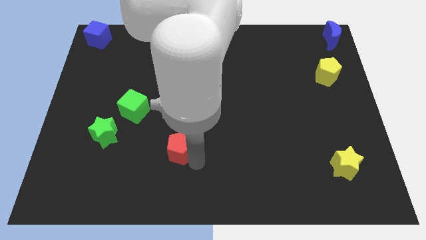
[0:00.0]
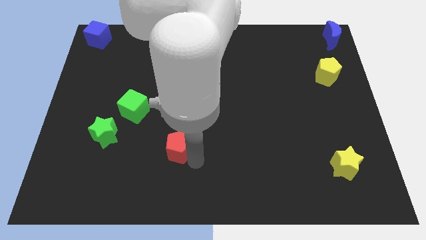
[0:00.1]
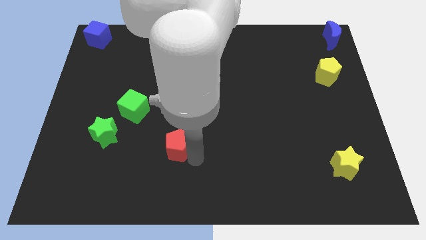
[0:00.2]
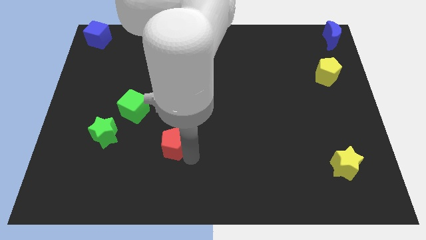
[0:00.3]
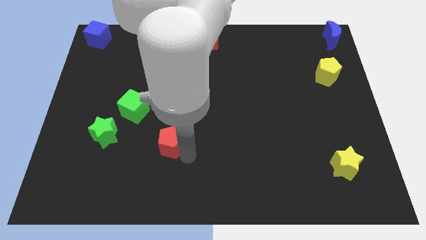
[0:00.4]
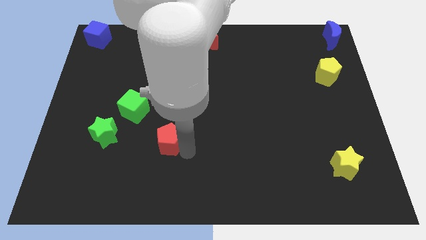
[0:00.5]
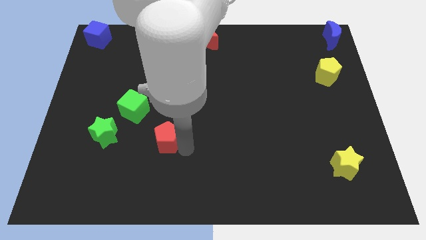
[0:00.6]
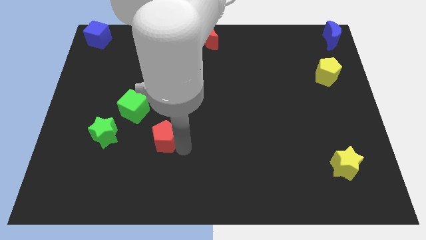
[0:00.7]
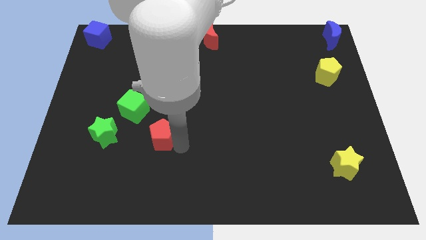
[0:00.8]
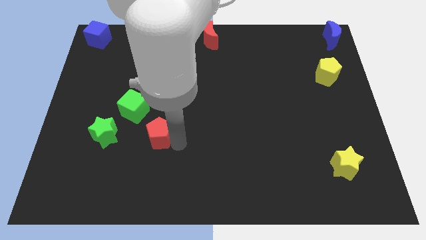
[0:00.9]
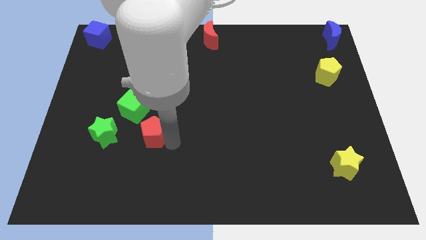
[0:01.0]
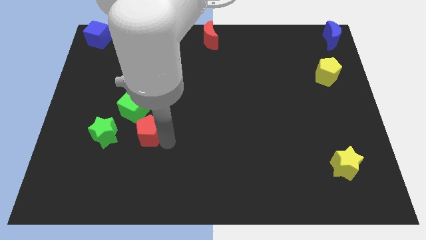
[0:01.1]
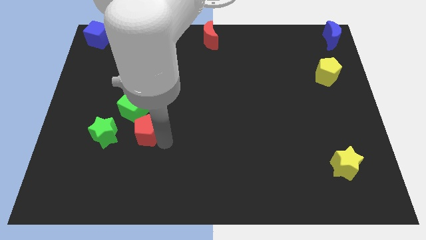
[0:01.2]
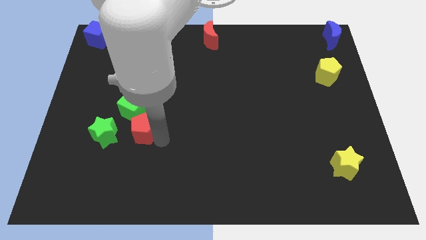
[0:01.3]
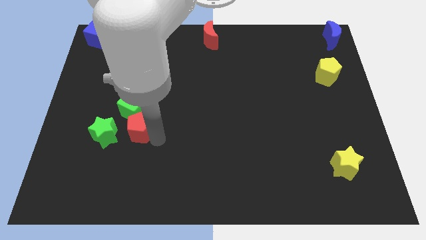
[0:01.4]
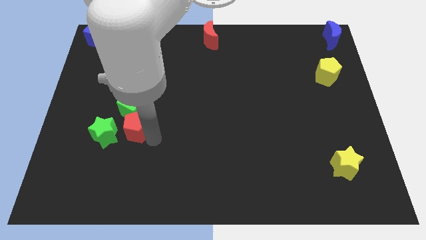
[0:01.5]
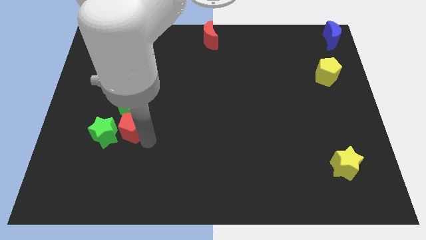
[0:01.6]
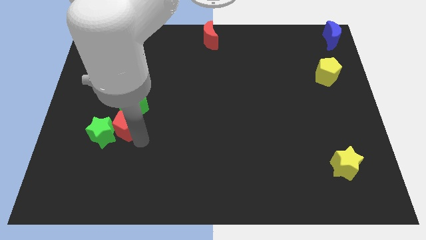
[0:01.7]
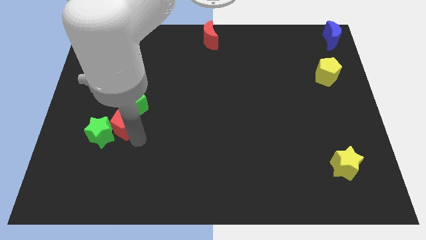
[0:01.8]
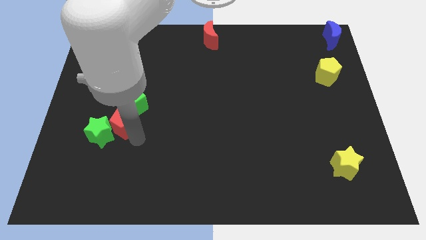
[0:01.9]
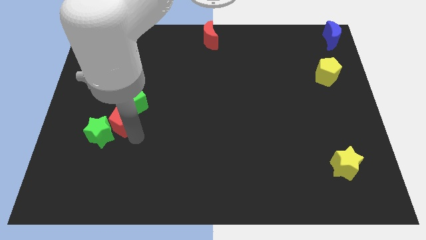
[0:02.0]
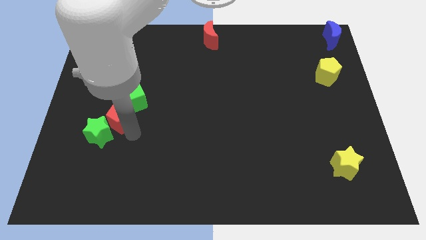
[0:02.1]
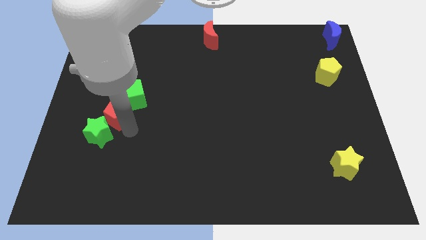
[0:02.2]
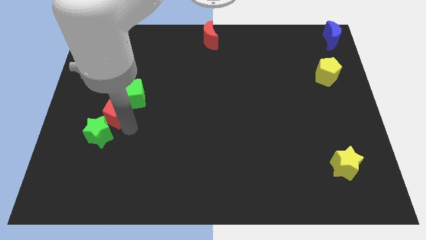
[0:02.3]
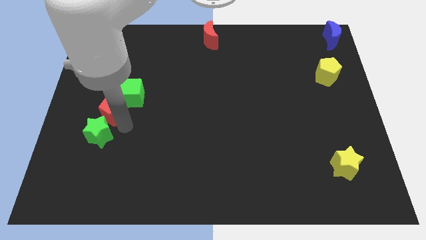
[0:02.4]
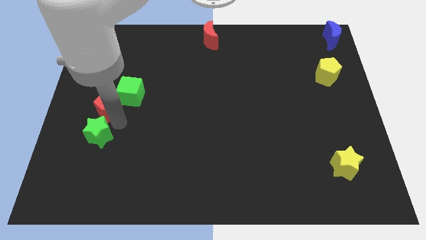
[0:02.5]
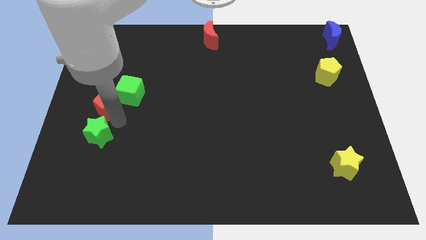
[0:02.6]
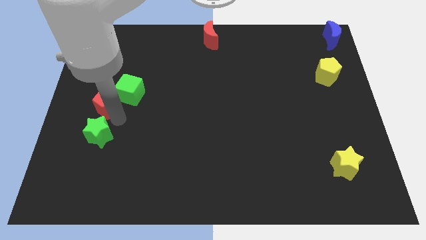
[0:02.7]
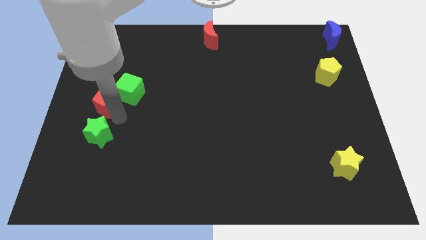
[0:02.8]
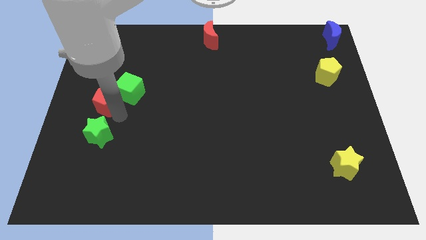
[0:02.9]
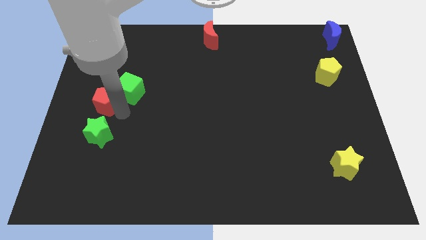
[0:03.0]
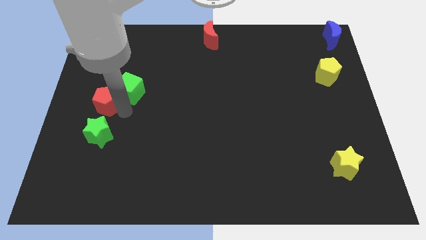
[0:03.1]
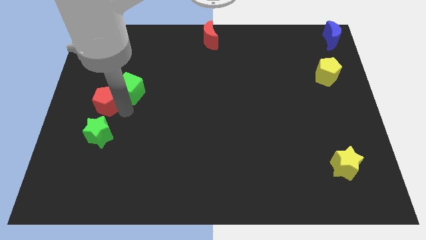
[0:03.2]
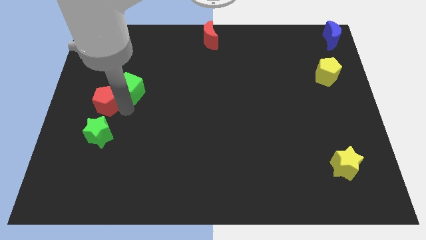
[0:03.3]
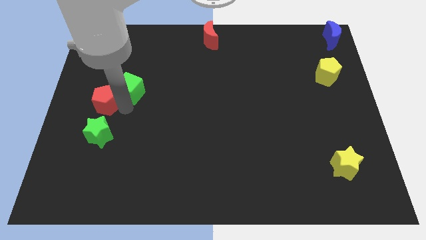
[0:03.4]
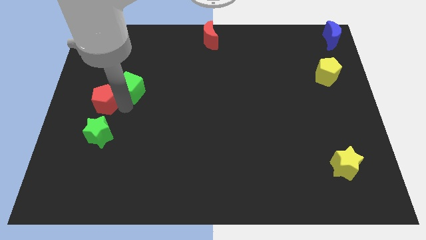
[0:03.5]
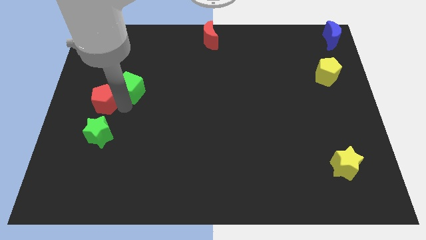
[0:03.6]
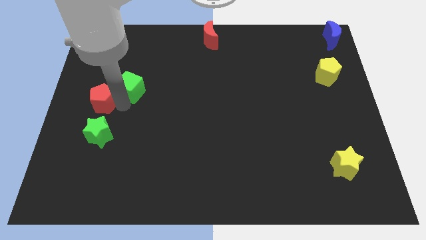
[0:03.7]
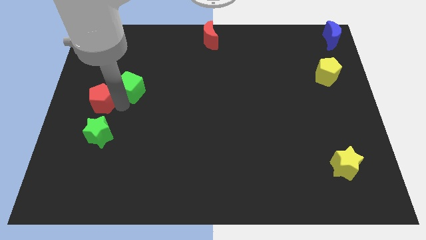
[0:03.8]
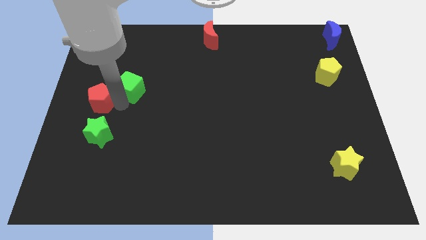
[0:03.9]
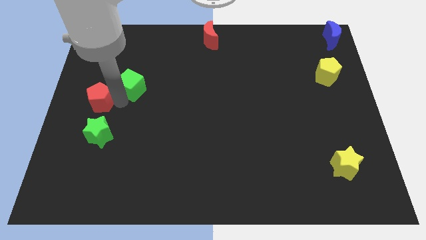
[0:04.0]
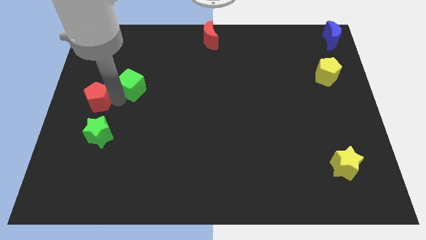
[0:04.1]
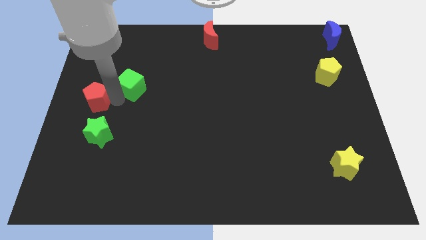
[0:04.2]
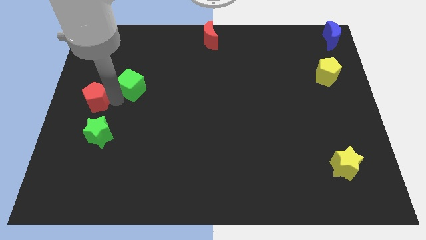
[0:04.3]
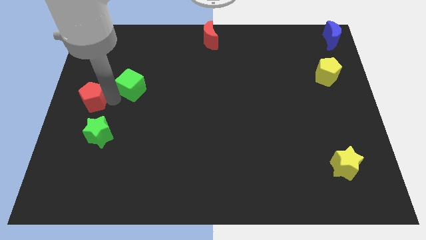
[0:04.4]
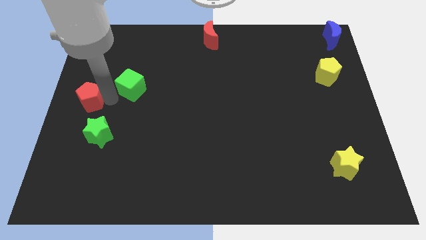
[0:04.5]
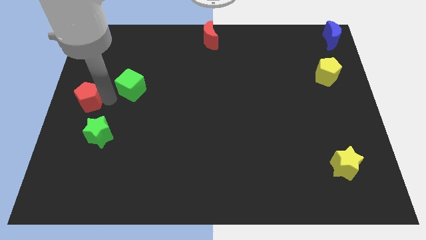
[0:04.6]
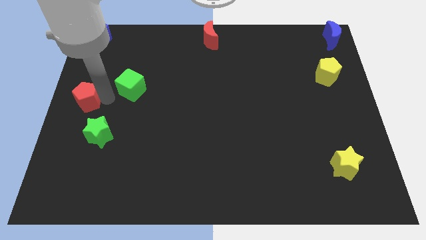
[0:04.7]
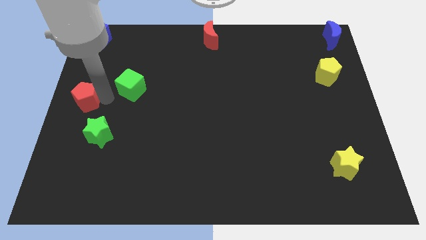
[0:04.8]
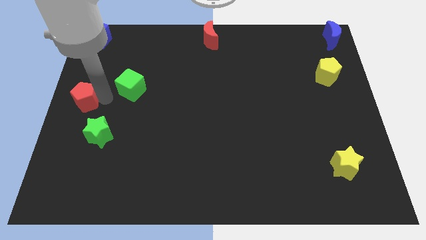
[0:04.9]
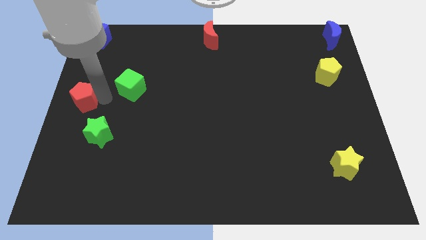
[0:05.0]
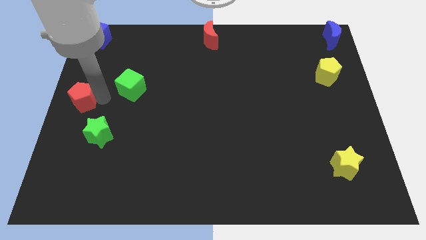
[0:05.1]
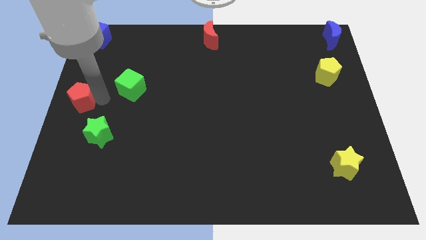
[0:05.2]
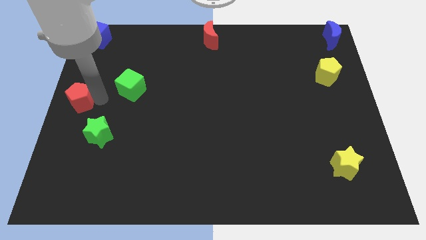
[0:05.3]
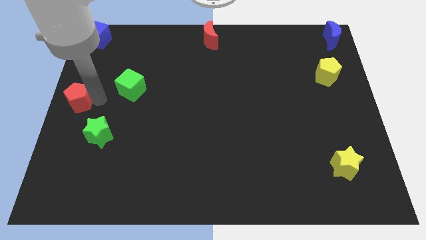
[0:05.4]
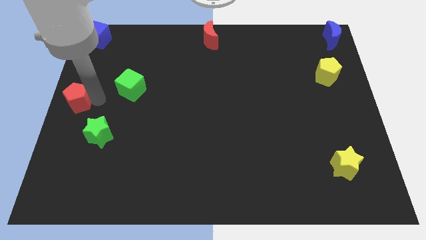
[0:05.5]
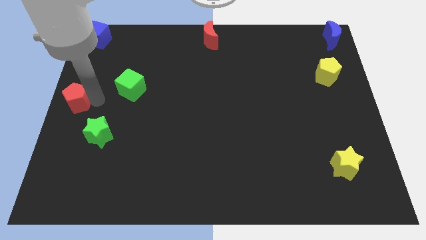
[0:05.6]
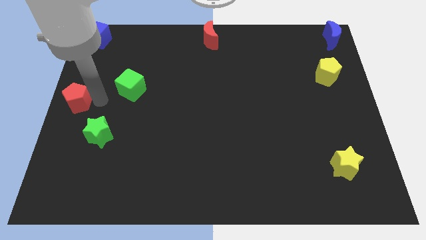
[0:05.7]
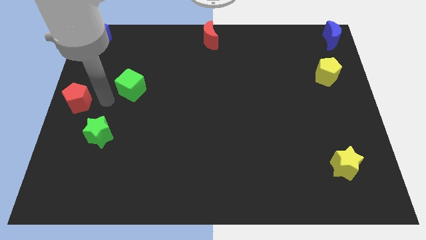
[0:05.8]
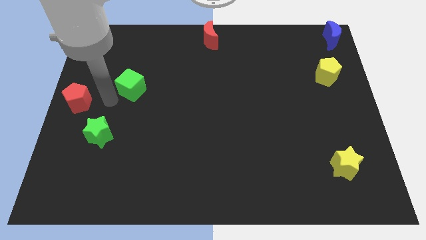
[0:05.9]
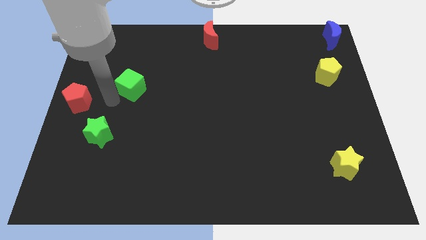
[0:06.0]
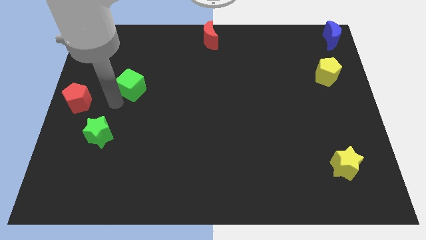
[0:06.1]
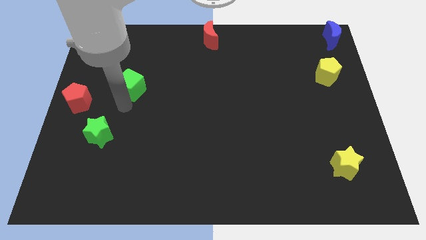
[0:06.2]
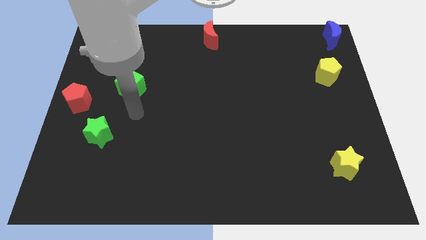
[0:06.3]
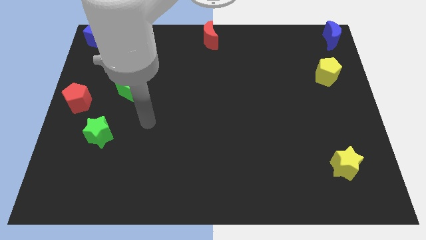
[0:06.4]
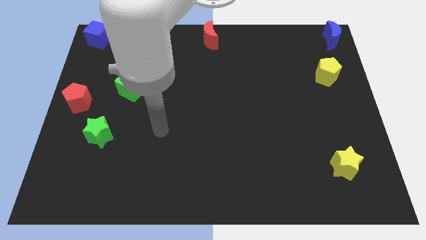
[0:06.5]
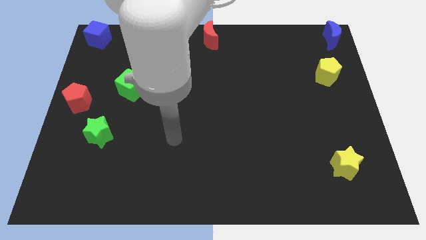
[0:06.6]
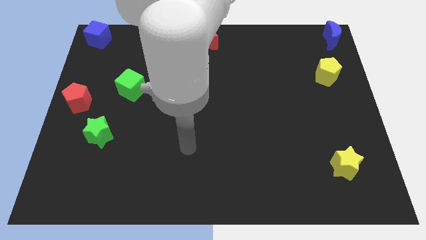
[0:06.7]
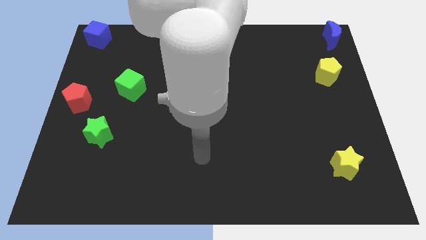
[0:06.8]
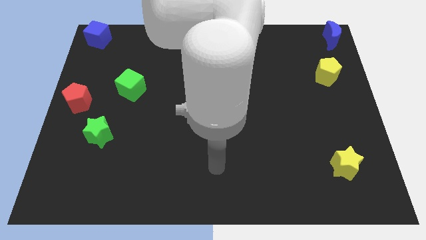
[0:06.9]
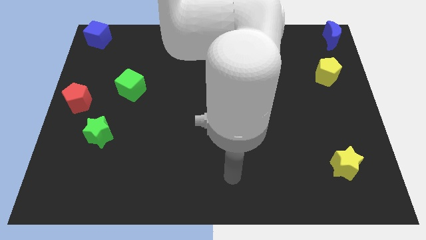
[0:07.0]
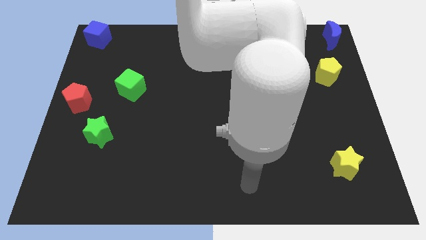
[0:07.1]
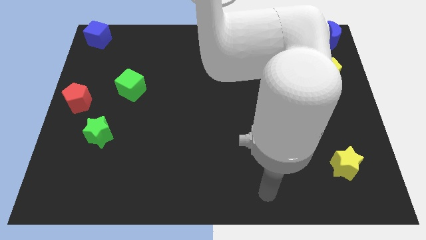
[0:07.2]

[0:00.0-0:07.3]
place the red pentagon above the green star

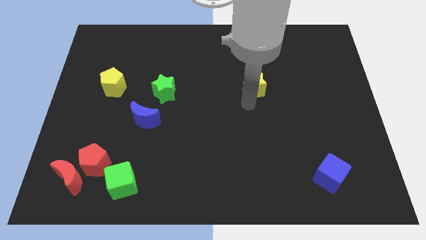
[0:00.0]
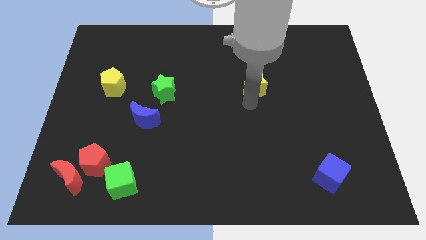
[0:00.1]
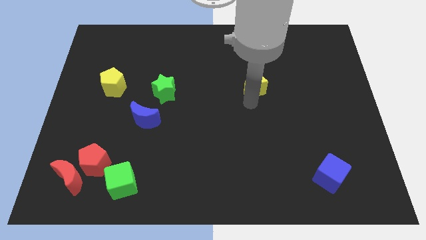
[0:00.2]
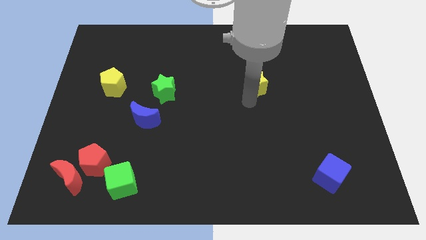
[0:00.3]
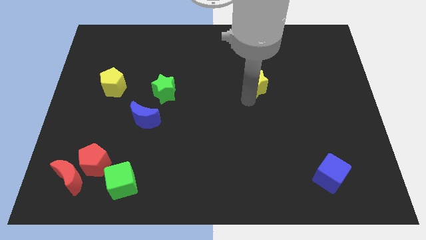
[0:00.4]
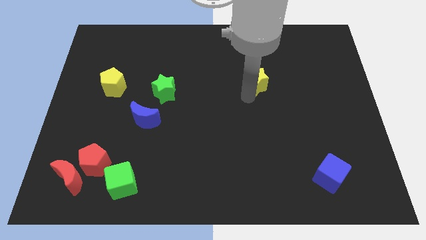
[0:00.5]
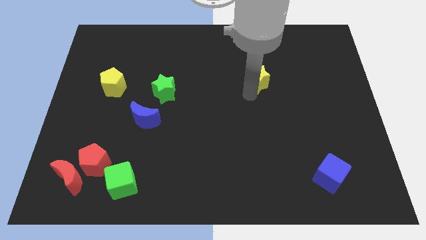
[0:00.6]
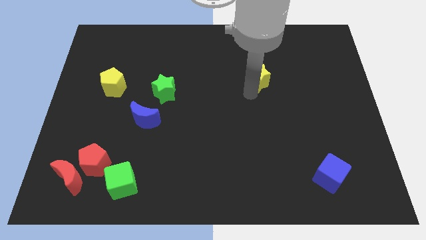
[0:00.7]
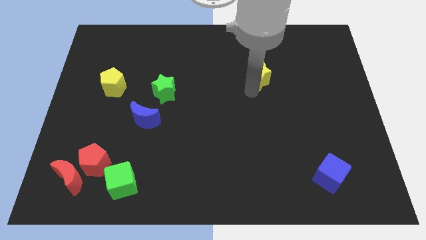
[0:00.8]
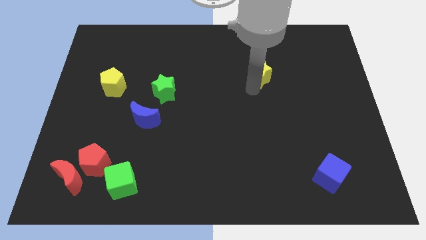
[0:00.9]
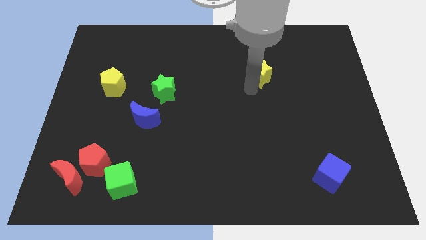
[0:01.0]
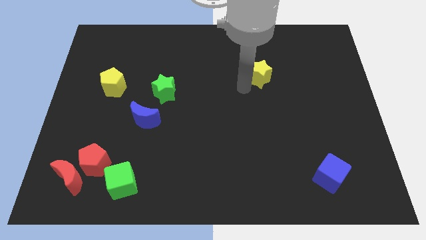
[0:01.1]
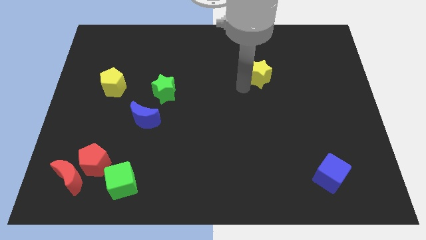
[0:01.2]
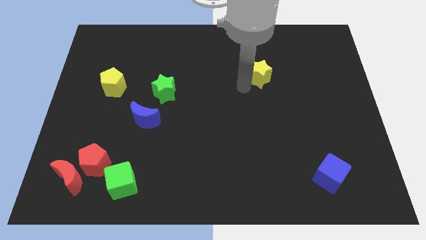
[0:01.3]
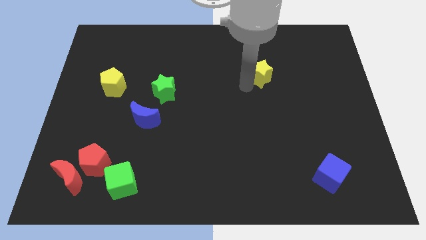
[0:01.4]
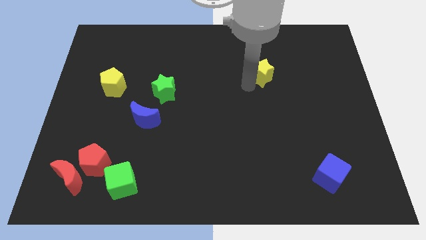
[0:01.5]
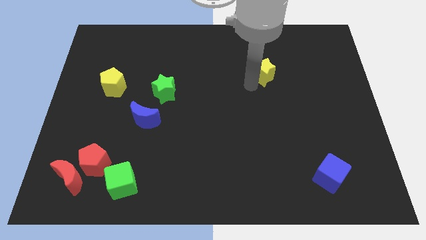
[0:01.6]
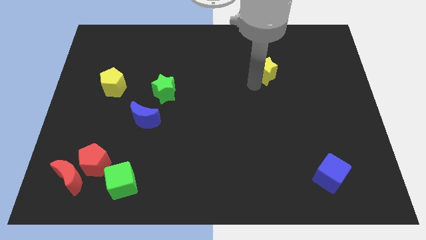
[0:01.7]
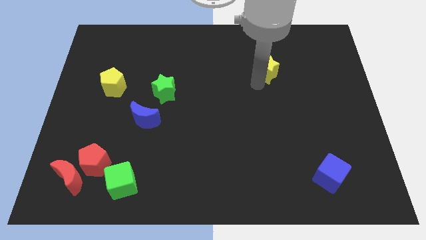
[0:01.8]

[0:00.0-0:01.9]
move the yellow star diagonally top right to the green star
